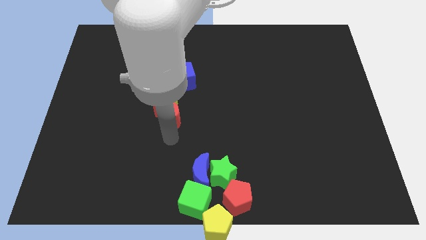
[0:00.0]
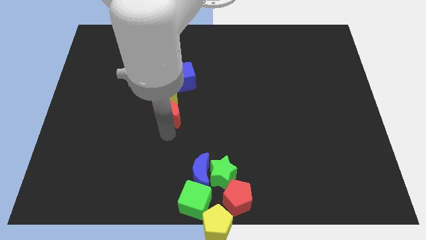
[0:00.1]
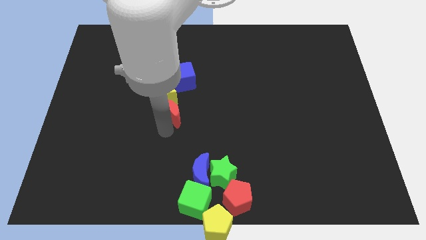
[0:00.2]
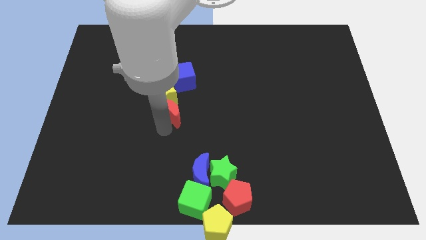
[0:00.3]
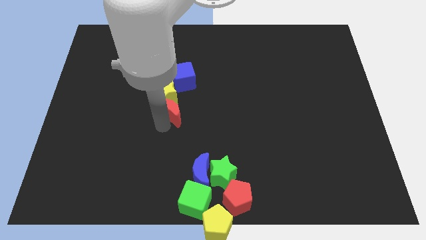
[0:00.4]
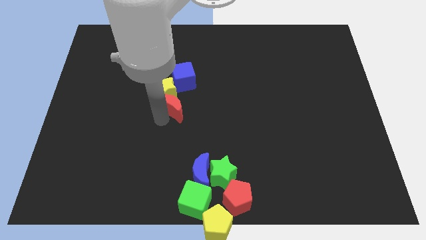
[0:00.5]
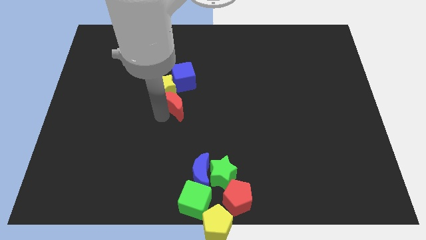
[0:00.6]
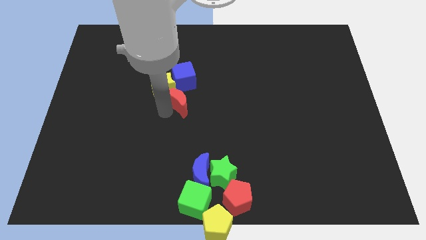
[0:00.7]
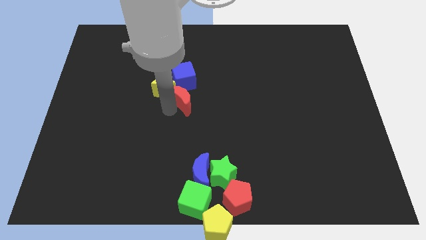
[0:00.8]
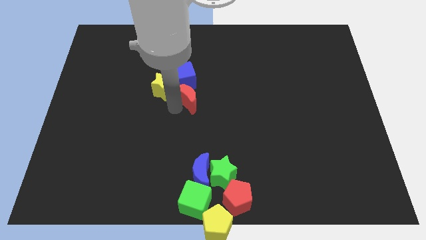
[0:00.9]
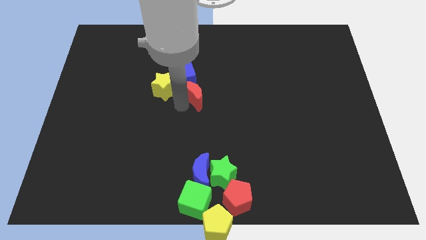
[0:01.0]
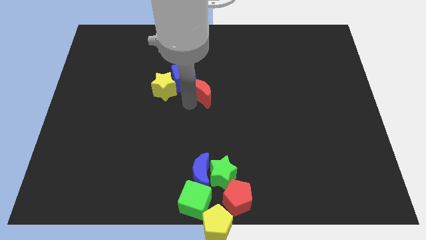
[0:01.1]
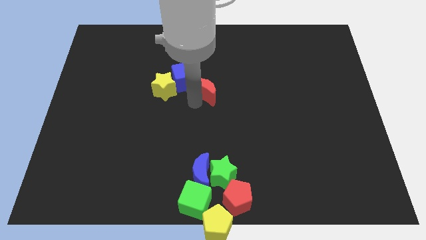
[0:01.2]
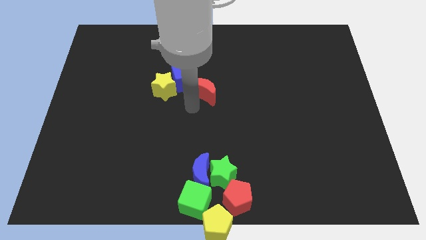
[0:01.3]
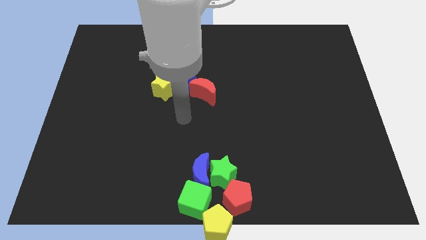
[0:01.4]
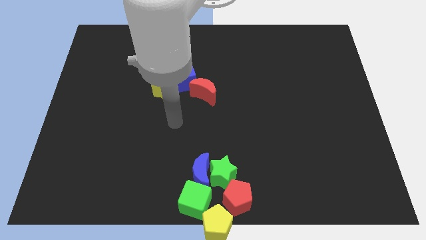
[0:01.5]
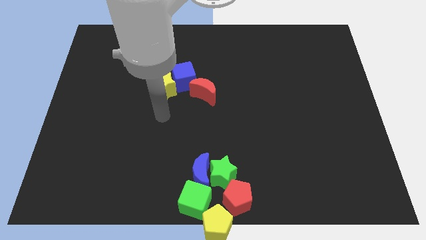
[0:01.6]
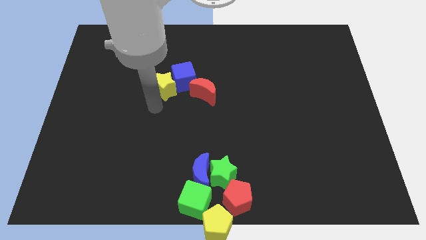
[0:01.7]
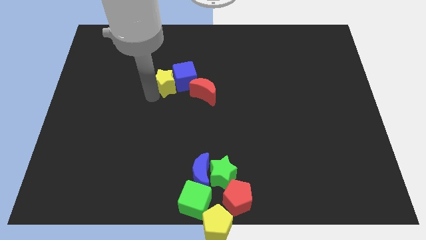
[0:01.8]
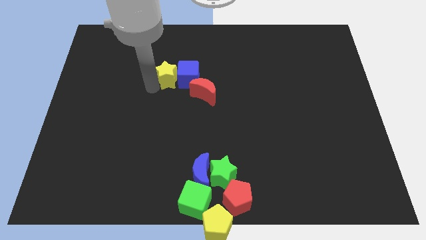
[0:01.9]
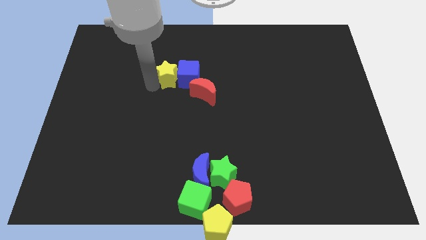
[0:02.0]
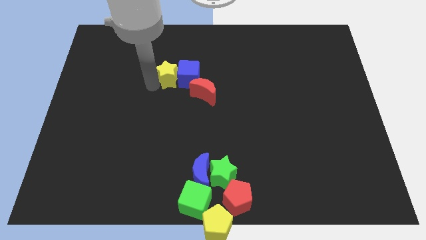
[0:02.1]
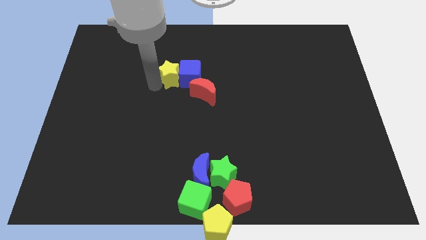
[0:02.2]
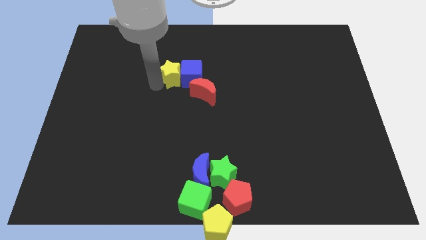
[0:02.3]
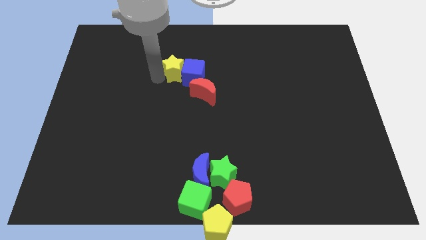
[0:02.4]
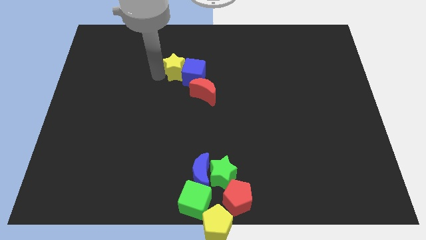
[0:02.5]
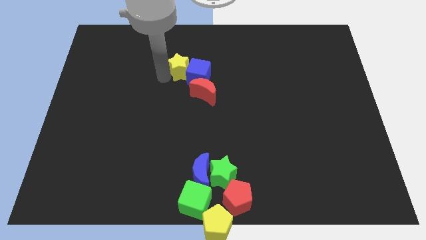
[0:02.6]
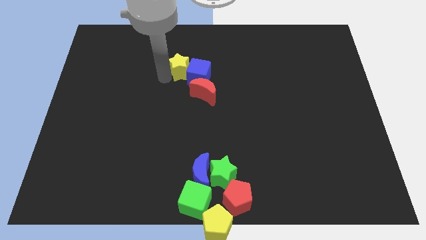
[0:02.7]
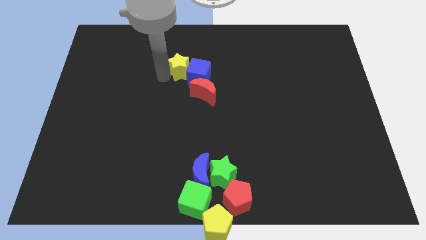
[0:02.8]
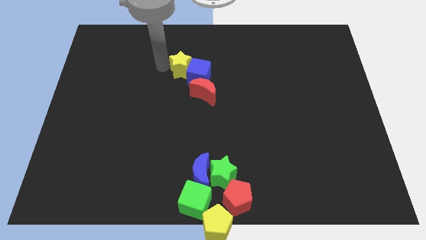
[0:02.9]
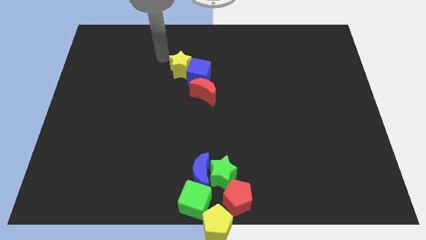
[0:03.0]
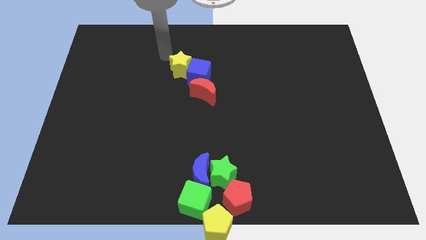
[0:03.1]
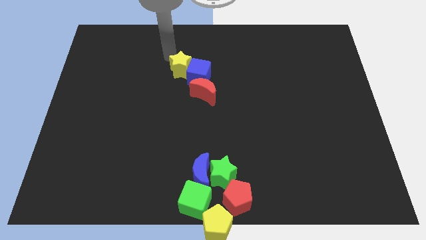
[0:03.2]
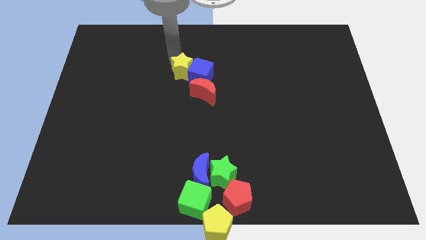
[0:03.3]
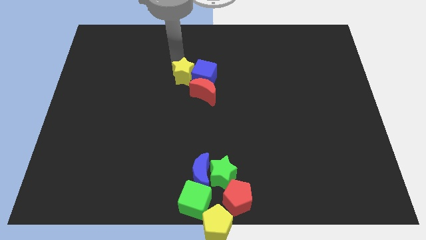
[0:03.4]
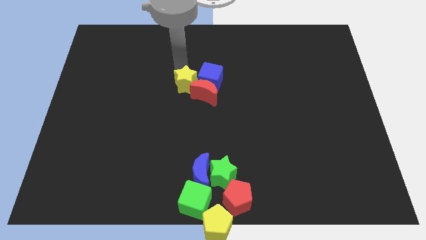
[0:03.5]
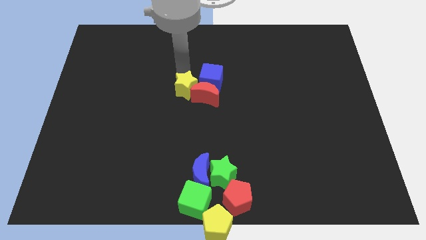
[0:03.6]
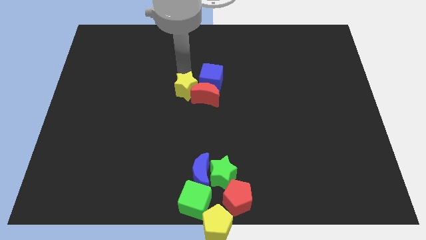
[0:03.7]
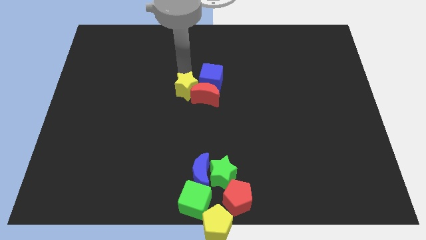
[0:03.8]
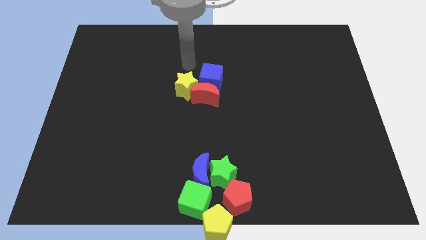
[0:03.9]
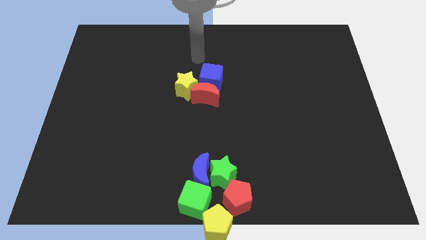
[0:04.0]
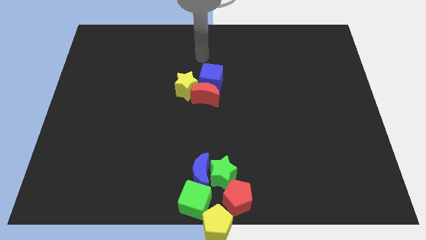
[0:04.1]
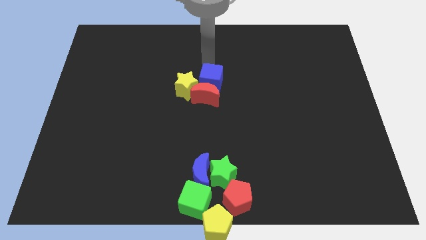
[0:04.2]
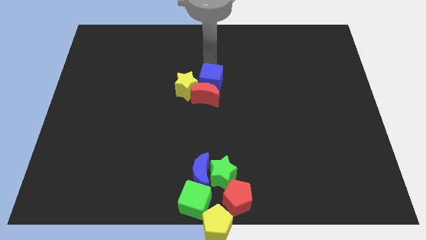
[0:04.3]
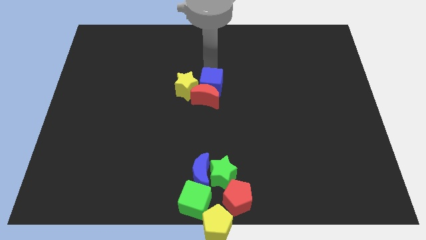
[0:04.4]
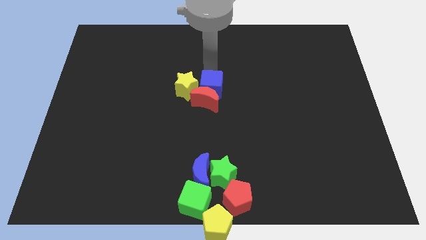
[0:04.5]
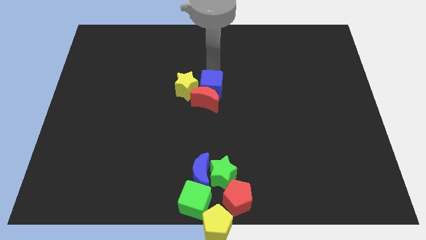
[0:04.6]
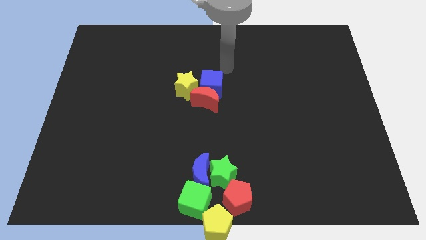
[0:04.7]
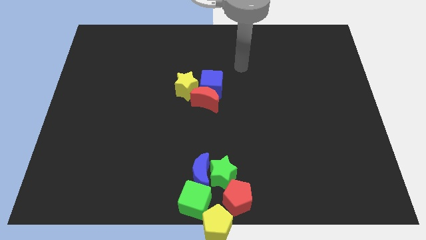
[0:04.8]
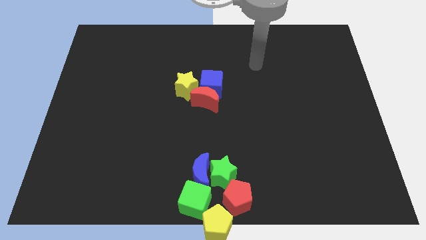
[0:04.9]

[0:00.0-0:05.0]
move the yellow star blue cube and red crescent towards the center

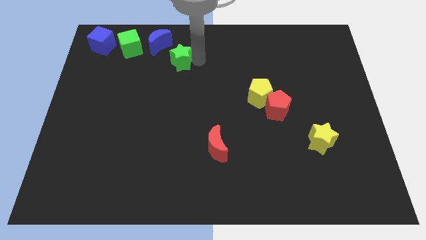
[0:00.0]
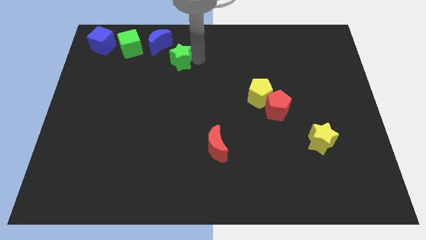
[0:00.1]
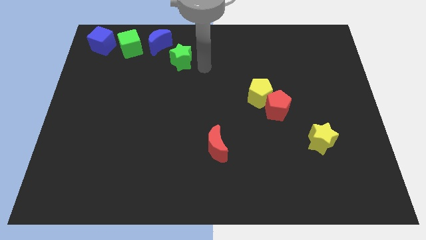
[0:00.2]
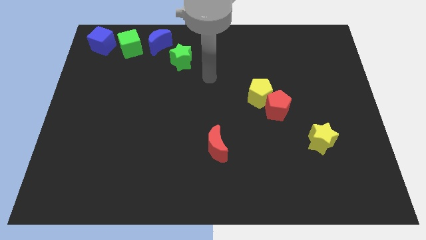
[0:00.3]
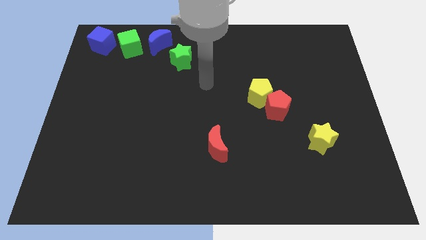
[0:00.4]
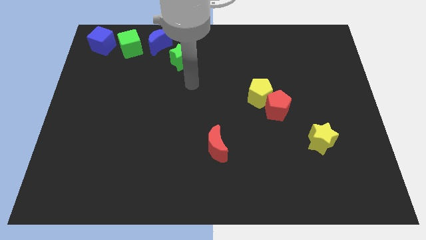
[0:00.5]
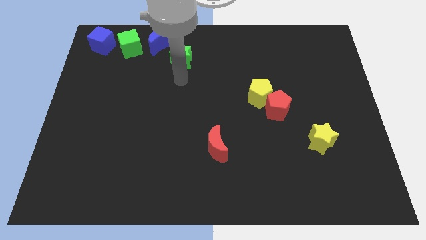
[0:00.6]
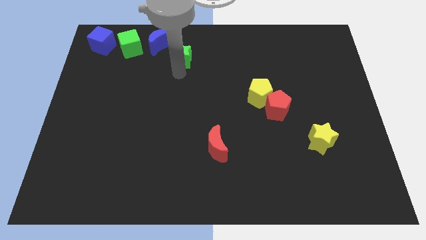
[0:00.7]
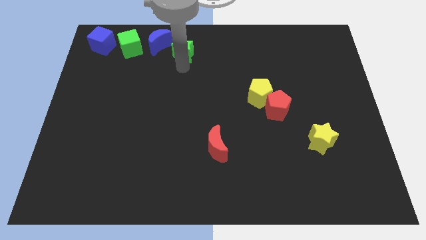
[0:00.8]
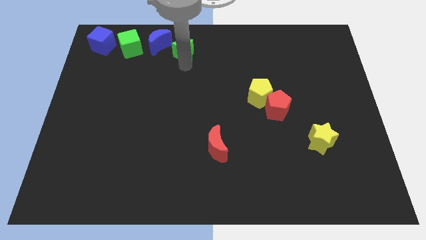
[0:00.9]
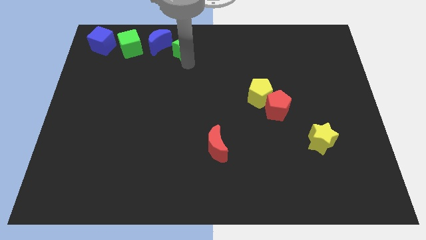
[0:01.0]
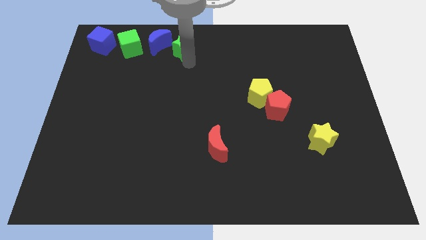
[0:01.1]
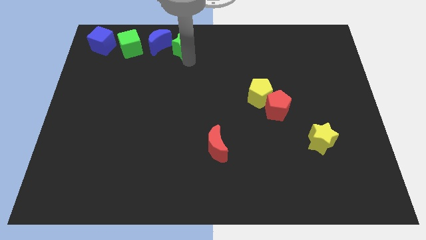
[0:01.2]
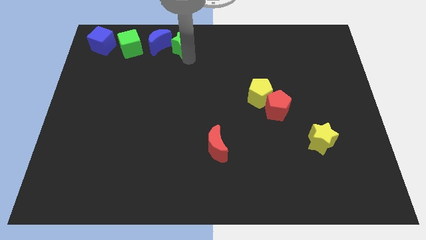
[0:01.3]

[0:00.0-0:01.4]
push the green star towards the top side of the board

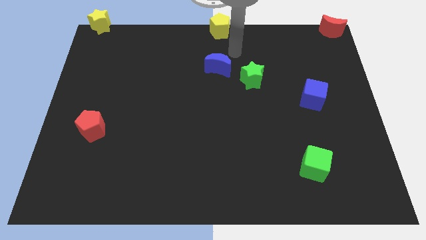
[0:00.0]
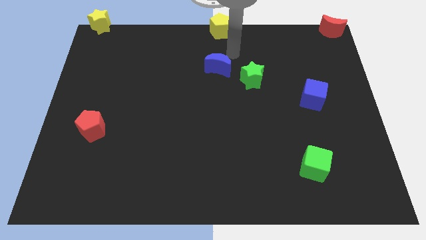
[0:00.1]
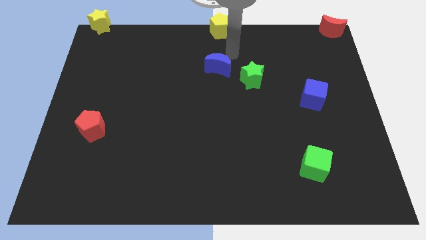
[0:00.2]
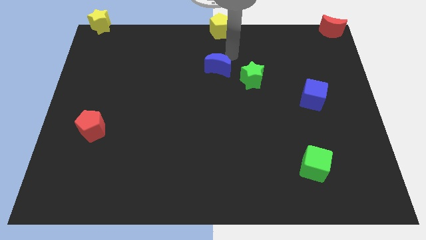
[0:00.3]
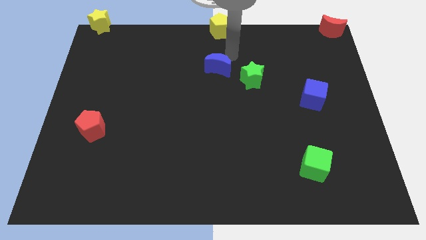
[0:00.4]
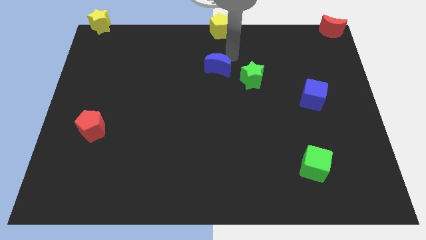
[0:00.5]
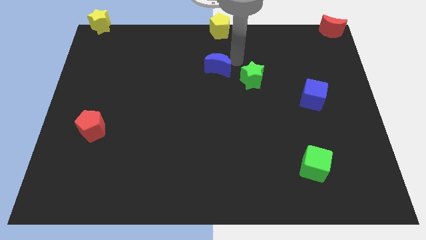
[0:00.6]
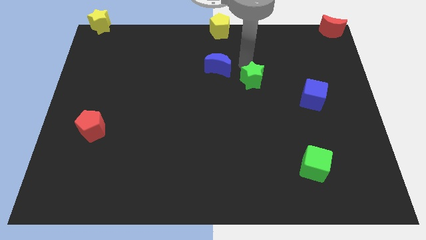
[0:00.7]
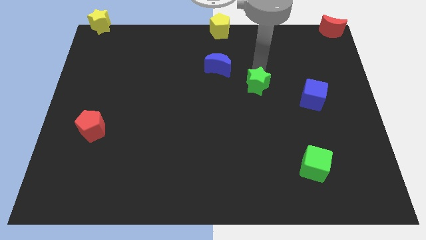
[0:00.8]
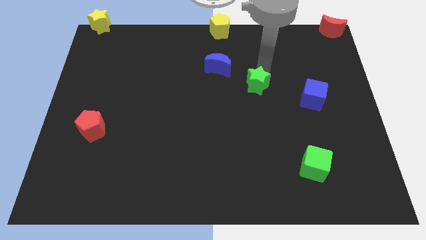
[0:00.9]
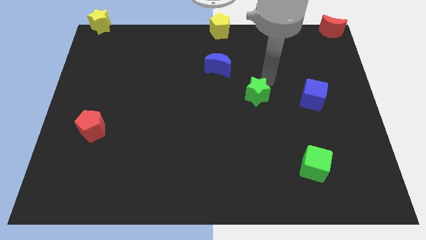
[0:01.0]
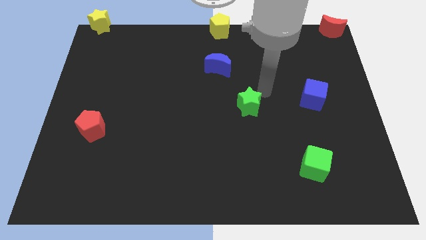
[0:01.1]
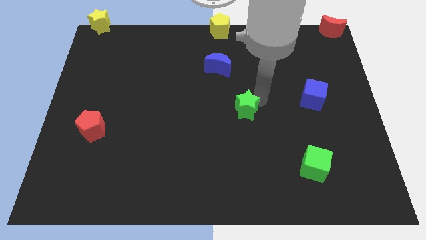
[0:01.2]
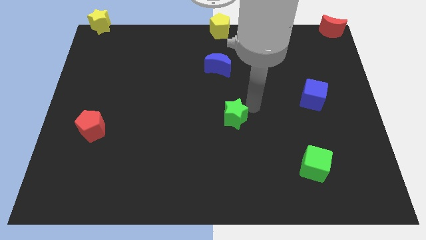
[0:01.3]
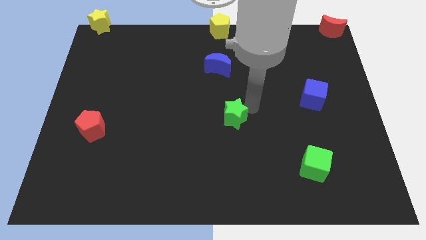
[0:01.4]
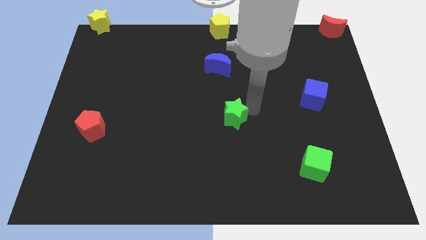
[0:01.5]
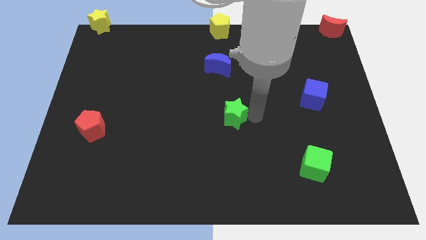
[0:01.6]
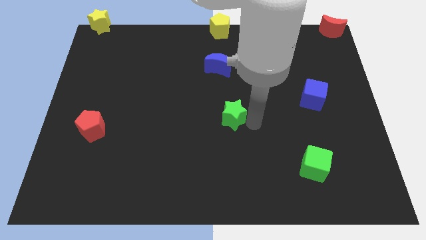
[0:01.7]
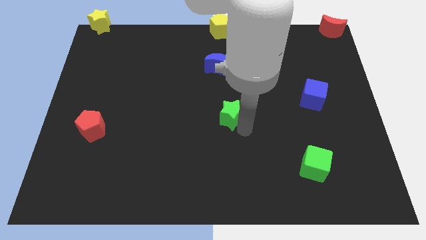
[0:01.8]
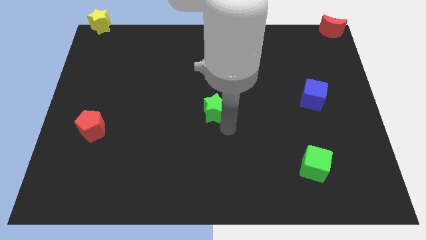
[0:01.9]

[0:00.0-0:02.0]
put the green star at the center of the board

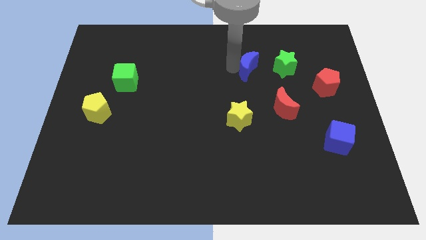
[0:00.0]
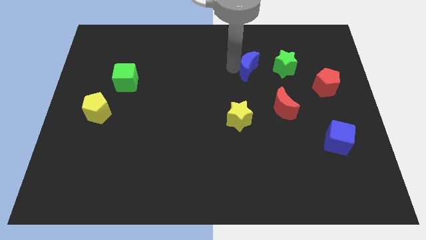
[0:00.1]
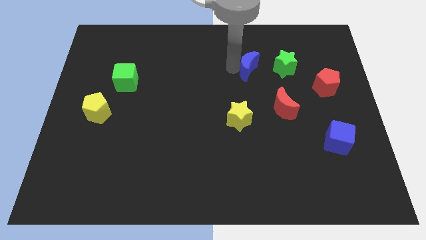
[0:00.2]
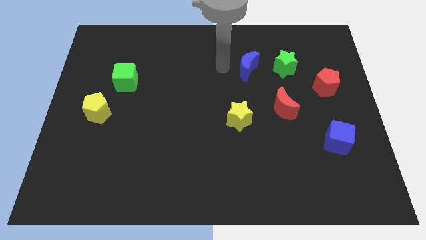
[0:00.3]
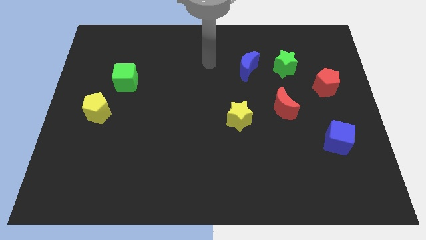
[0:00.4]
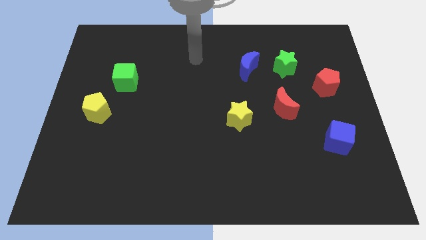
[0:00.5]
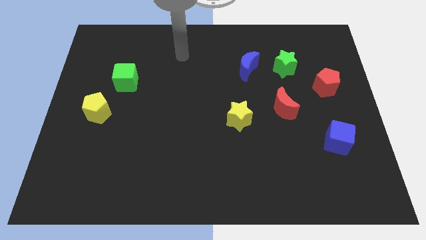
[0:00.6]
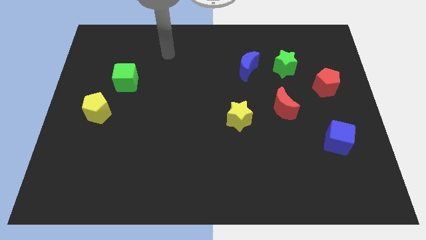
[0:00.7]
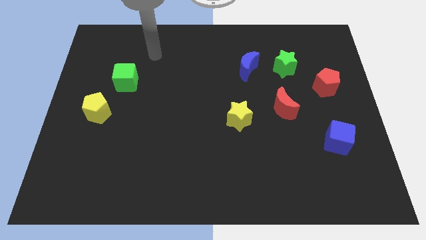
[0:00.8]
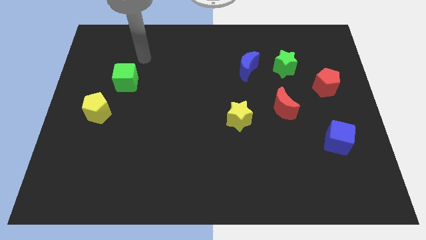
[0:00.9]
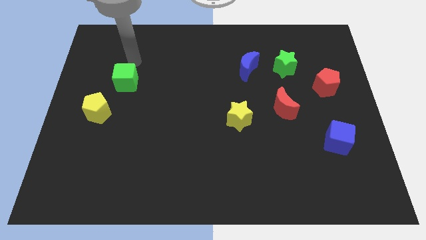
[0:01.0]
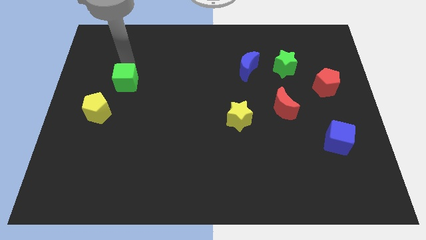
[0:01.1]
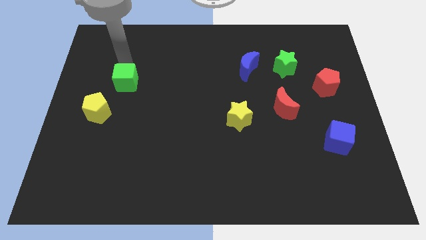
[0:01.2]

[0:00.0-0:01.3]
move your arm away from the blue moon
